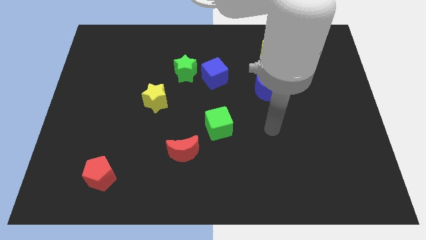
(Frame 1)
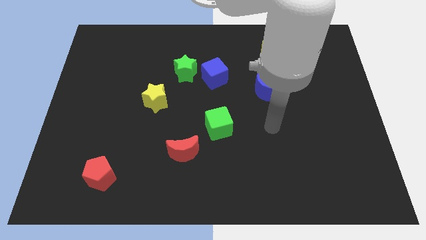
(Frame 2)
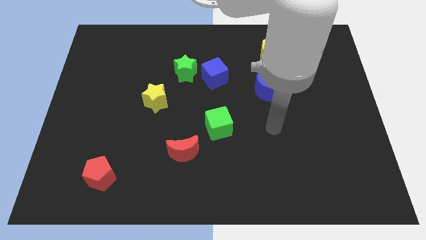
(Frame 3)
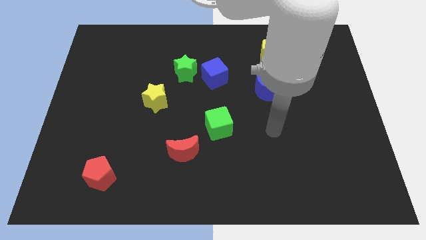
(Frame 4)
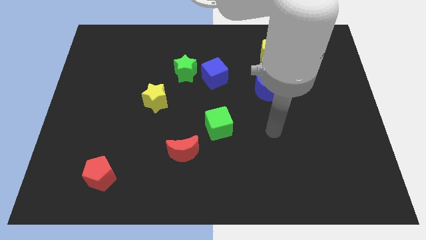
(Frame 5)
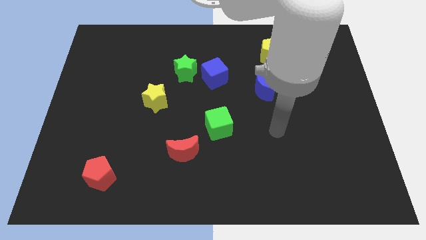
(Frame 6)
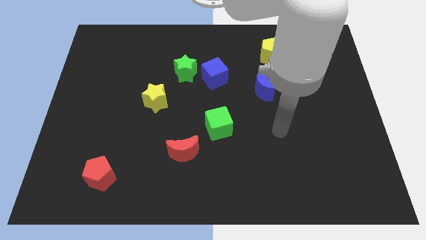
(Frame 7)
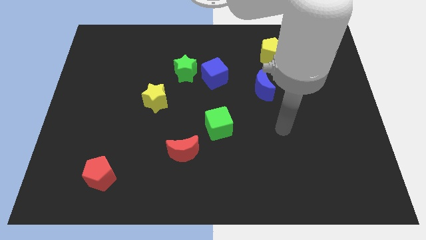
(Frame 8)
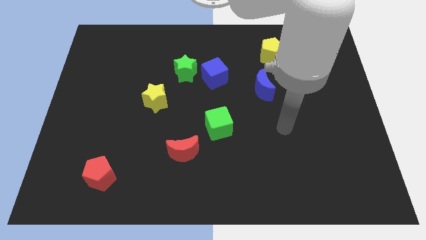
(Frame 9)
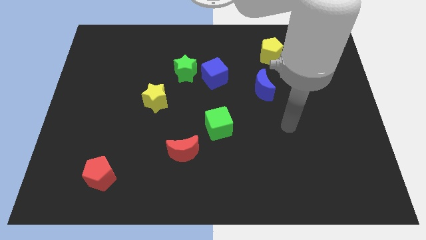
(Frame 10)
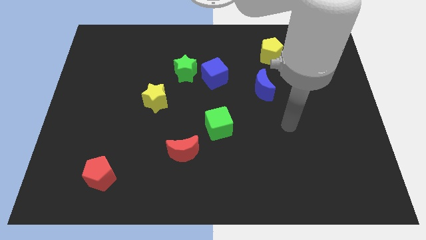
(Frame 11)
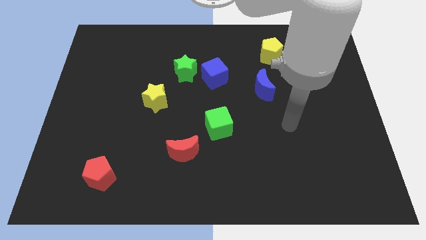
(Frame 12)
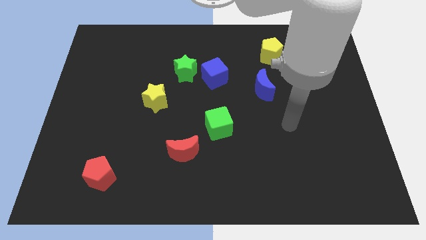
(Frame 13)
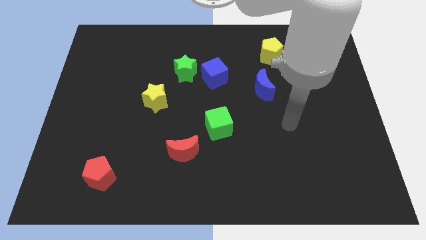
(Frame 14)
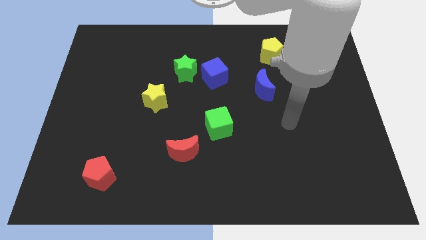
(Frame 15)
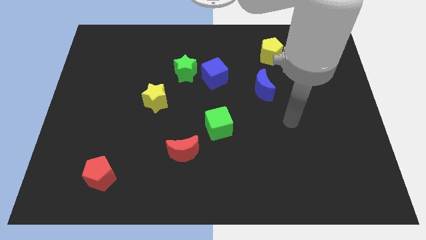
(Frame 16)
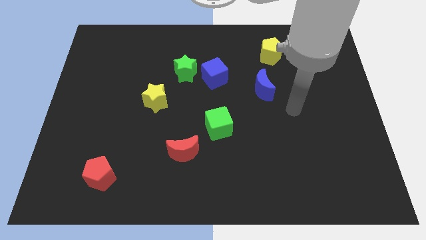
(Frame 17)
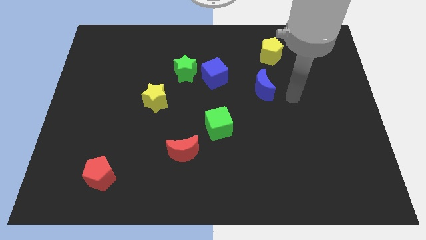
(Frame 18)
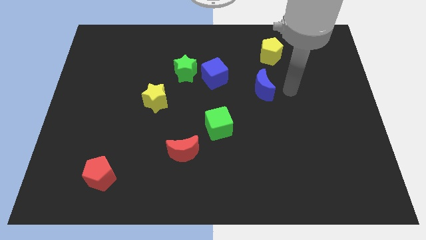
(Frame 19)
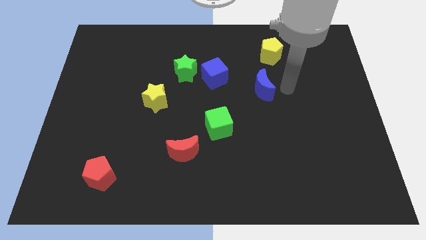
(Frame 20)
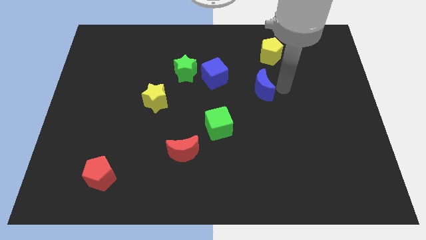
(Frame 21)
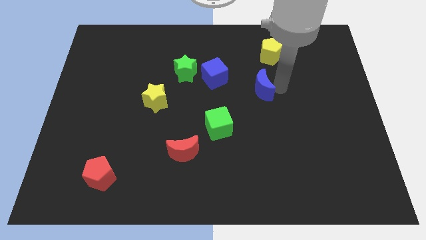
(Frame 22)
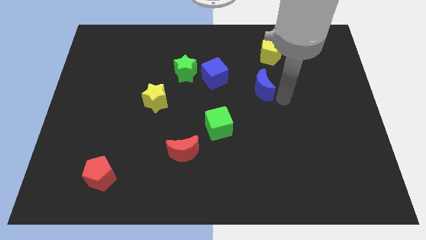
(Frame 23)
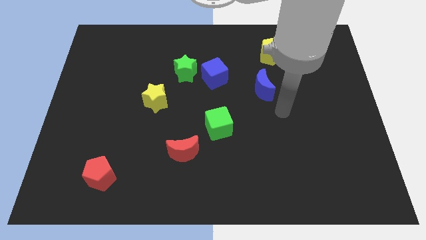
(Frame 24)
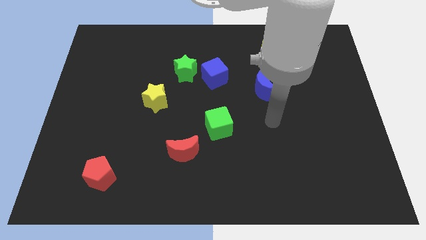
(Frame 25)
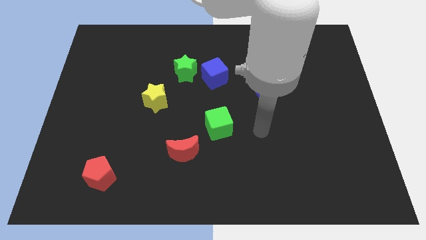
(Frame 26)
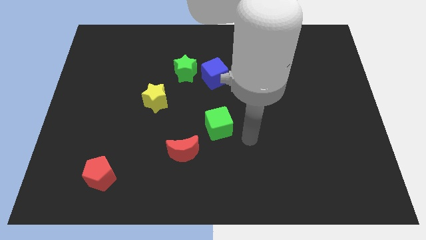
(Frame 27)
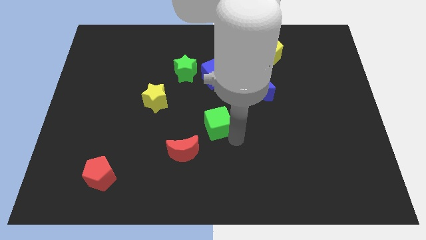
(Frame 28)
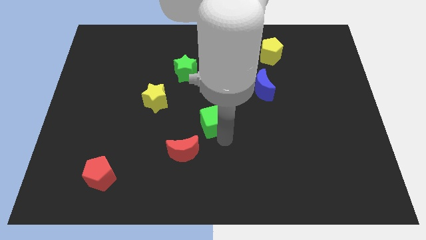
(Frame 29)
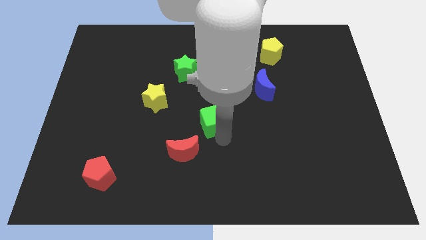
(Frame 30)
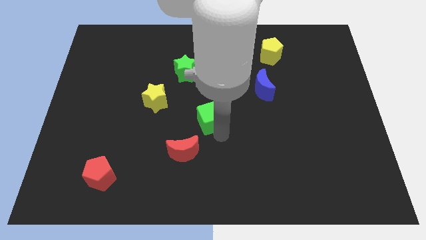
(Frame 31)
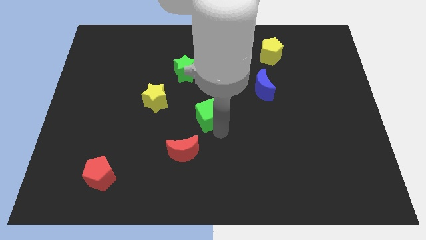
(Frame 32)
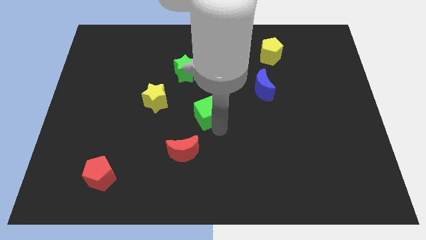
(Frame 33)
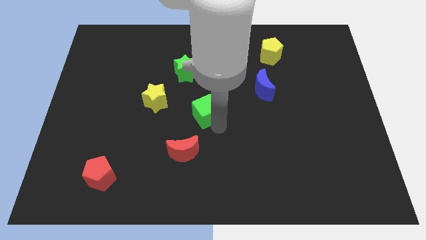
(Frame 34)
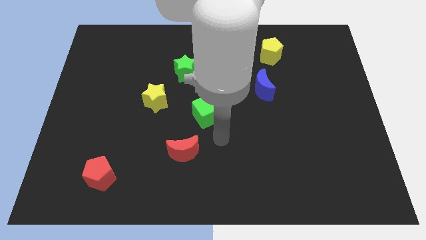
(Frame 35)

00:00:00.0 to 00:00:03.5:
push the green cube slightly to the top

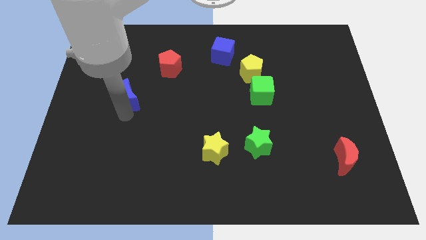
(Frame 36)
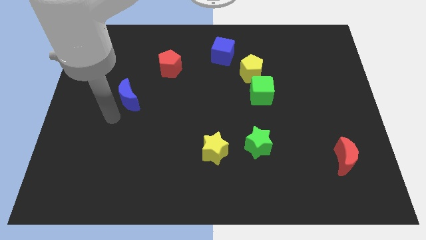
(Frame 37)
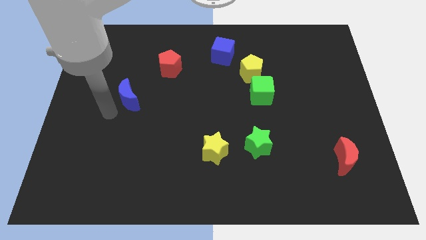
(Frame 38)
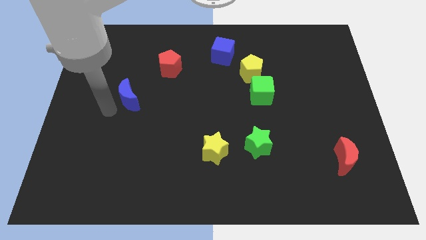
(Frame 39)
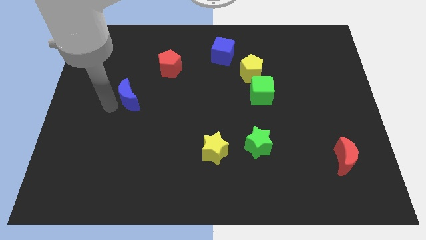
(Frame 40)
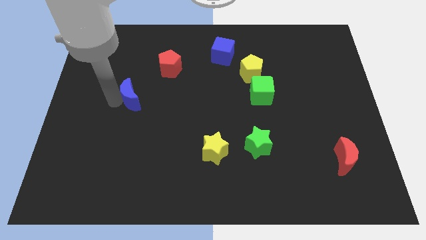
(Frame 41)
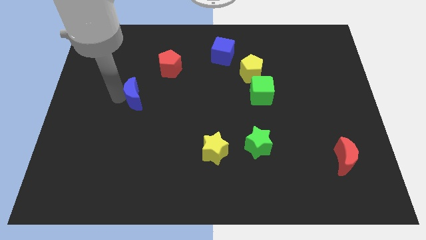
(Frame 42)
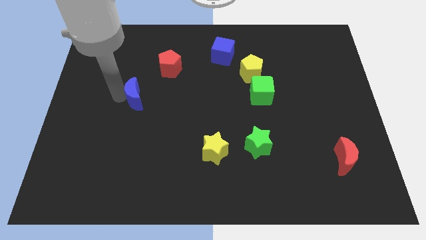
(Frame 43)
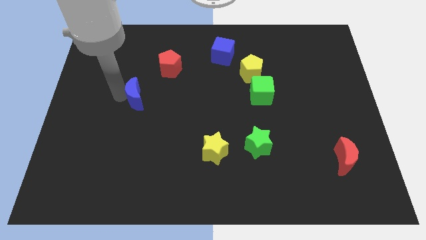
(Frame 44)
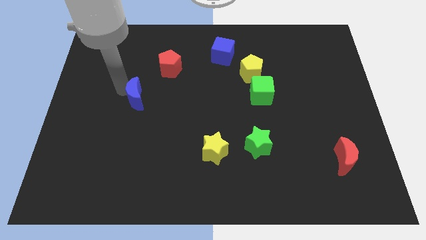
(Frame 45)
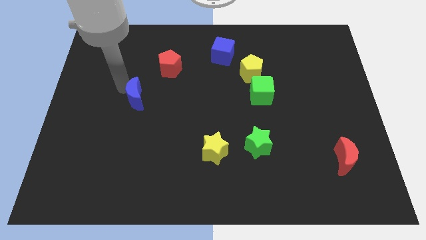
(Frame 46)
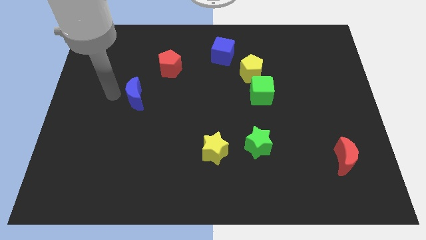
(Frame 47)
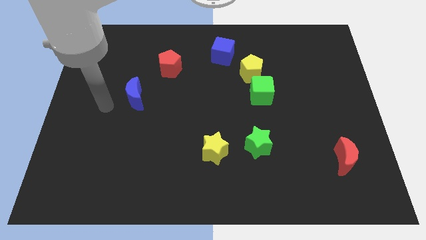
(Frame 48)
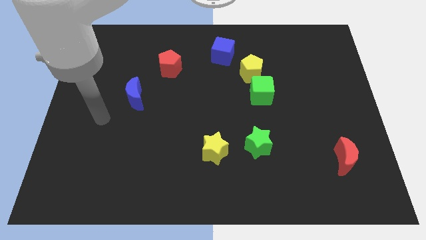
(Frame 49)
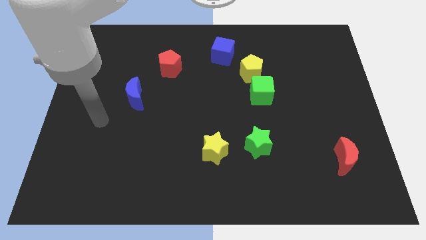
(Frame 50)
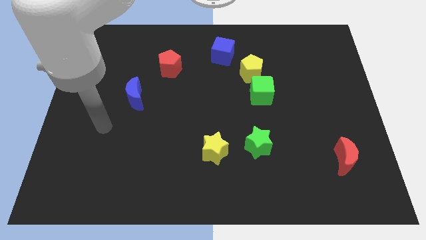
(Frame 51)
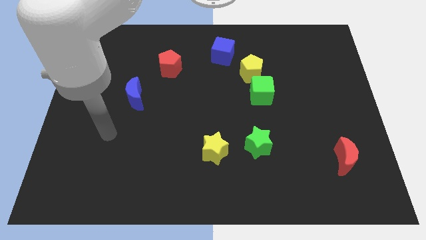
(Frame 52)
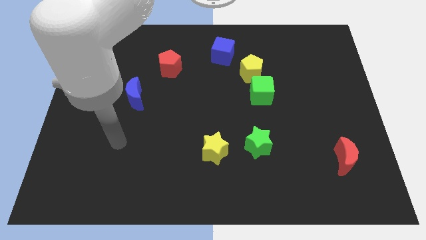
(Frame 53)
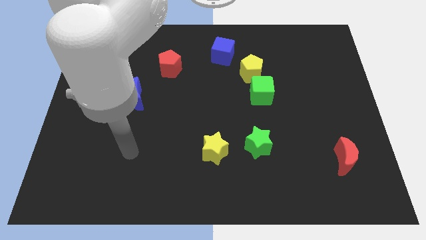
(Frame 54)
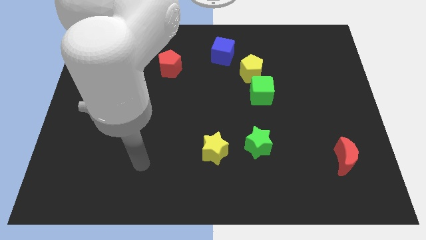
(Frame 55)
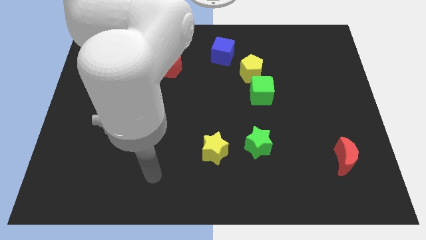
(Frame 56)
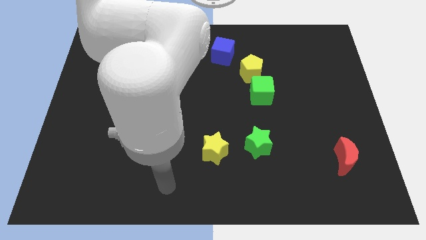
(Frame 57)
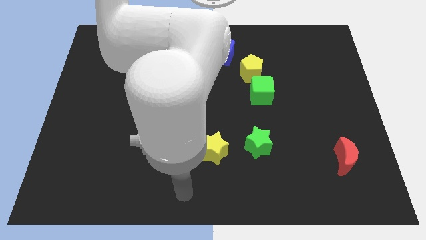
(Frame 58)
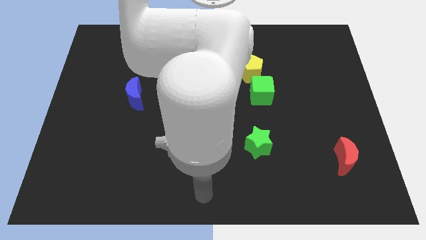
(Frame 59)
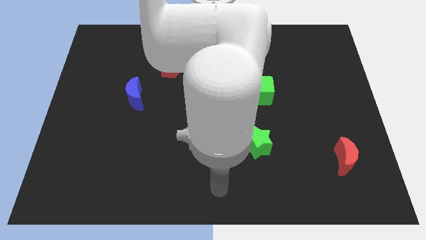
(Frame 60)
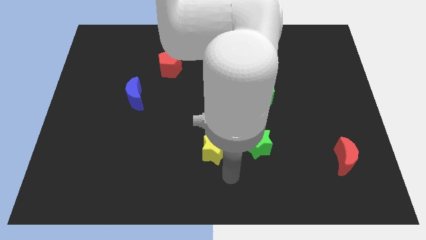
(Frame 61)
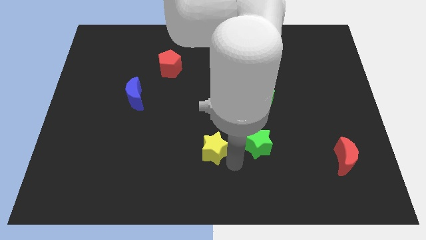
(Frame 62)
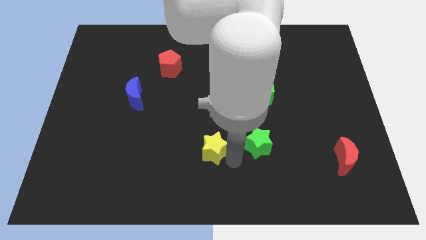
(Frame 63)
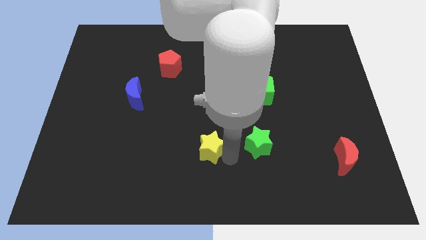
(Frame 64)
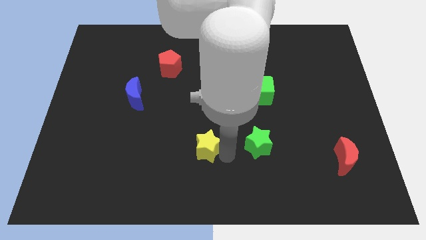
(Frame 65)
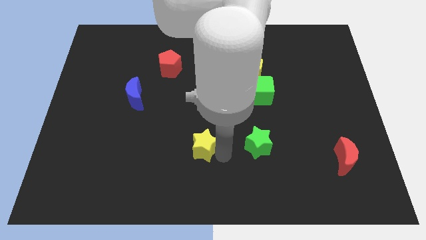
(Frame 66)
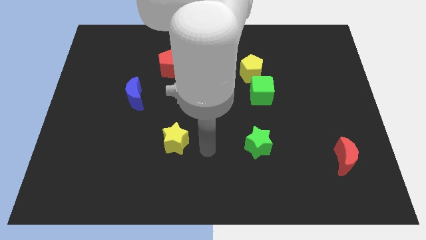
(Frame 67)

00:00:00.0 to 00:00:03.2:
slide the yellow star towards left side

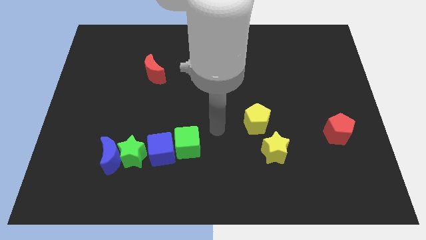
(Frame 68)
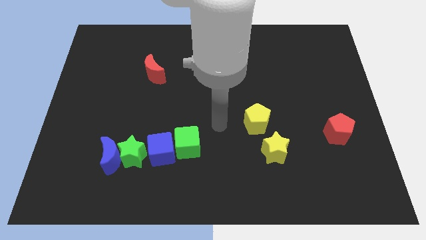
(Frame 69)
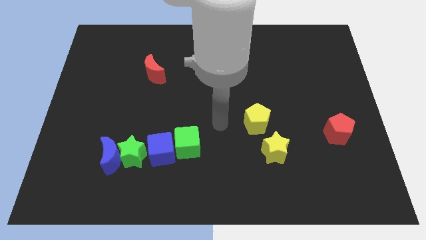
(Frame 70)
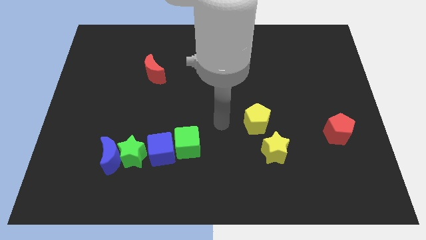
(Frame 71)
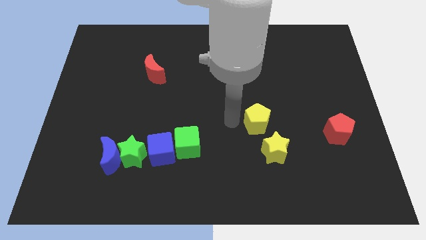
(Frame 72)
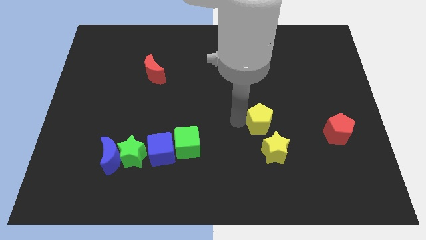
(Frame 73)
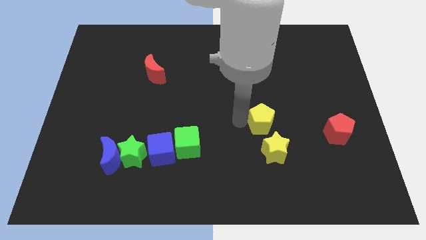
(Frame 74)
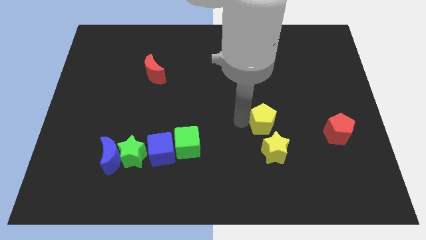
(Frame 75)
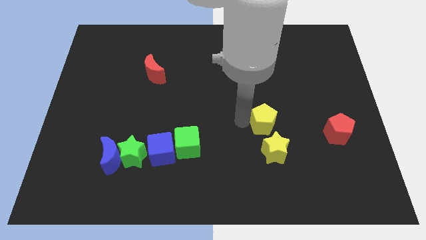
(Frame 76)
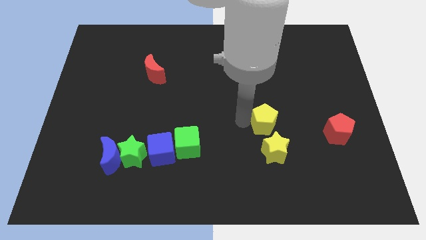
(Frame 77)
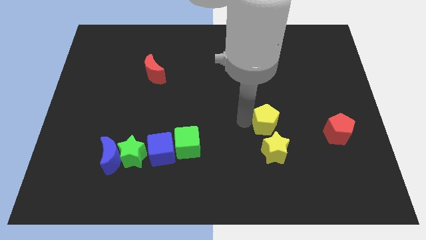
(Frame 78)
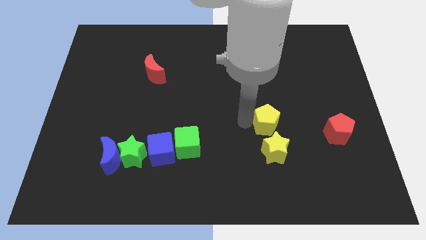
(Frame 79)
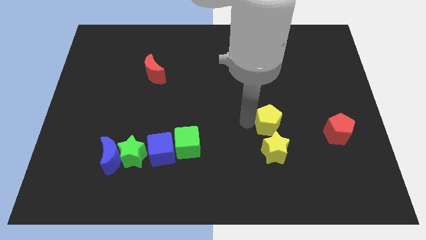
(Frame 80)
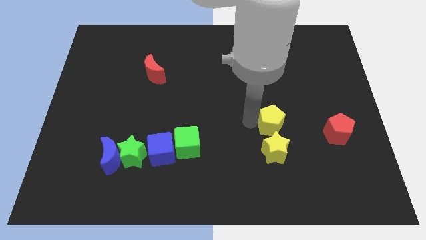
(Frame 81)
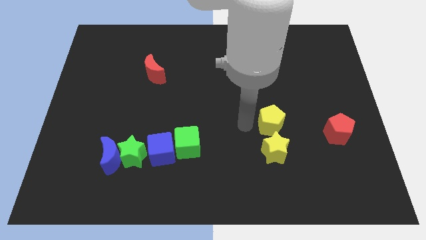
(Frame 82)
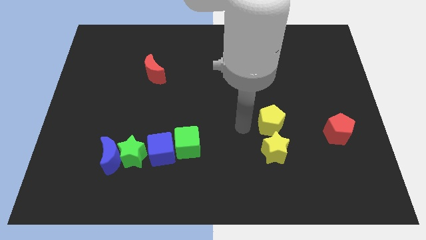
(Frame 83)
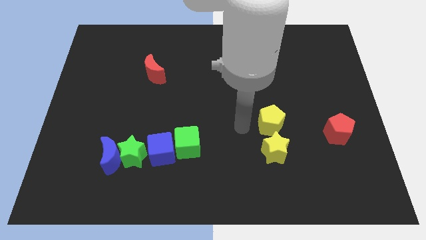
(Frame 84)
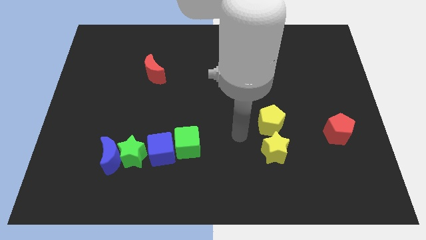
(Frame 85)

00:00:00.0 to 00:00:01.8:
push the yellow pentagon to the top of the yellow star

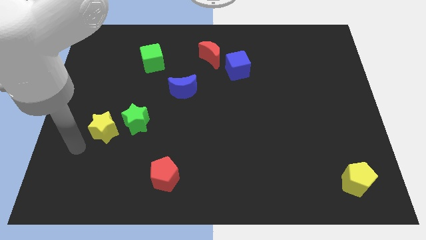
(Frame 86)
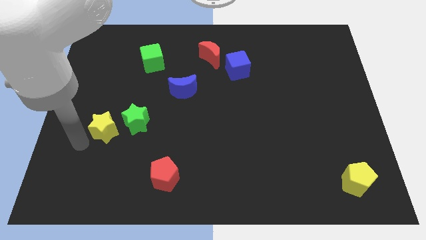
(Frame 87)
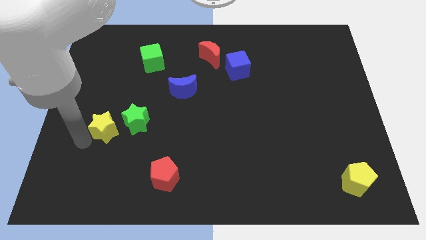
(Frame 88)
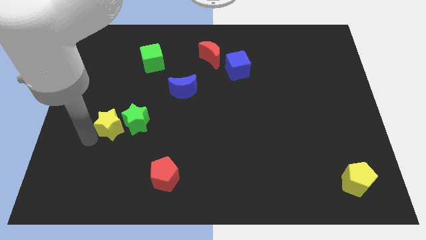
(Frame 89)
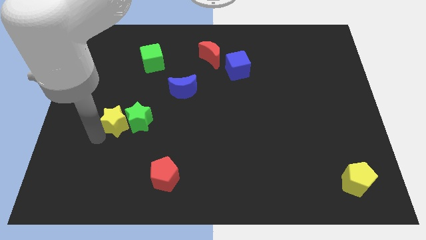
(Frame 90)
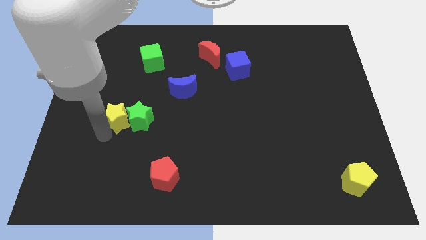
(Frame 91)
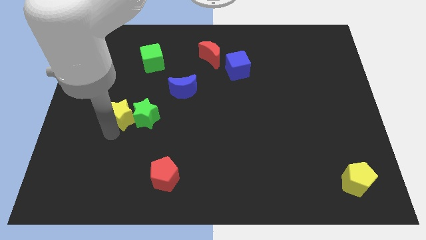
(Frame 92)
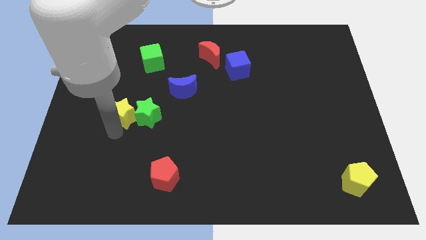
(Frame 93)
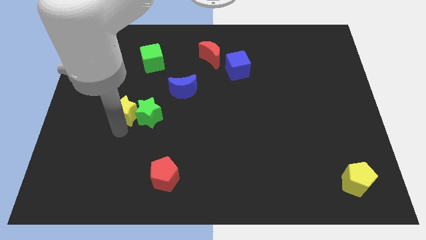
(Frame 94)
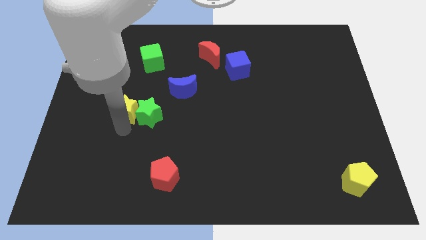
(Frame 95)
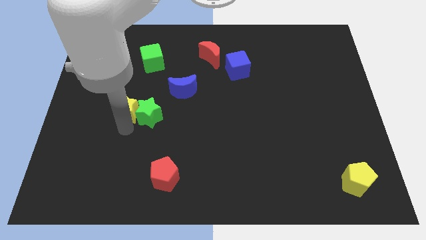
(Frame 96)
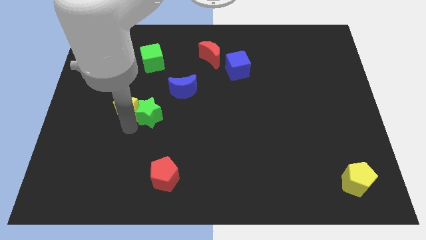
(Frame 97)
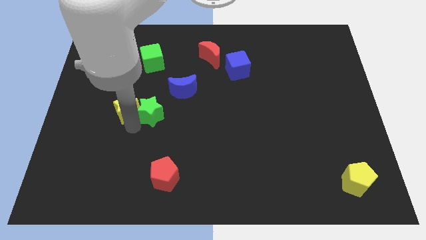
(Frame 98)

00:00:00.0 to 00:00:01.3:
push yellow star along with green star
